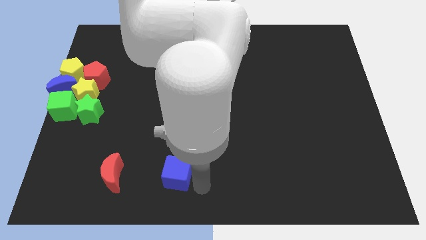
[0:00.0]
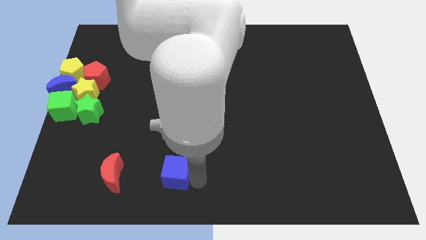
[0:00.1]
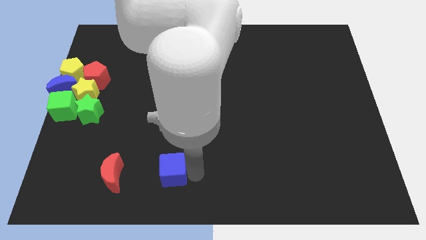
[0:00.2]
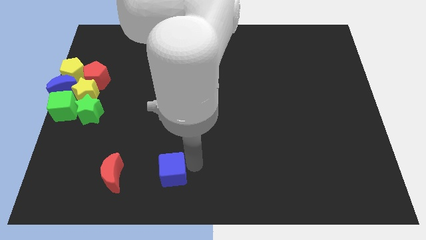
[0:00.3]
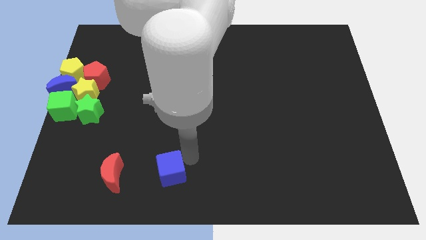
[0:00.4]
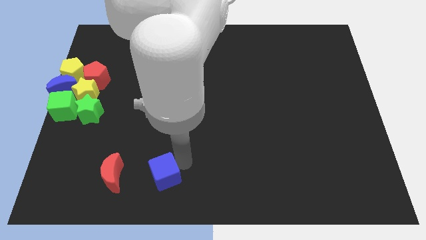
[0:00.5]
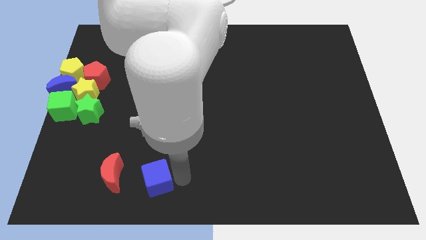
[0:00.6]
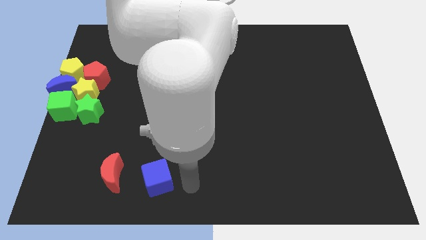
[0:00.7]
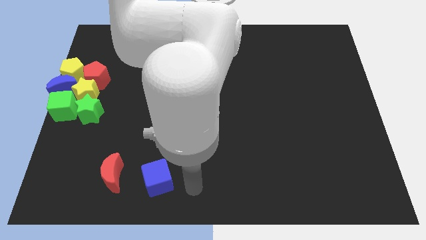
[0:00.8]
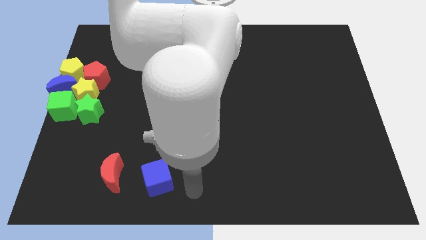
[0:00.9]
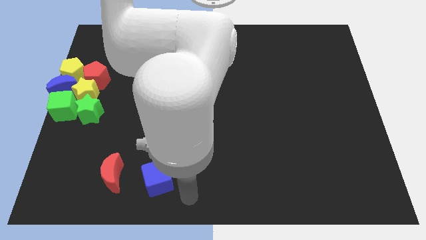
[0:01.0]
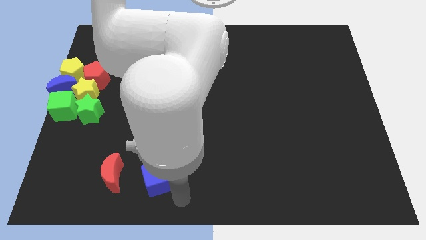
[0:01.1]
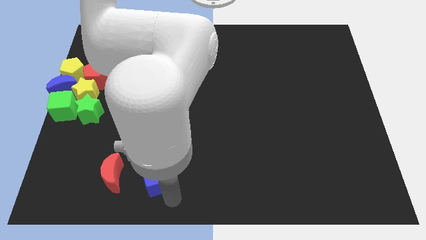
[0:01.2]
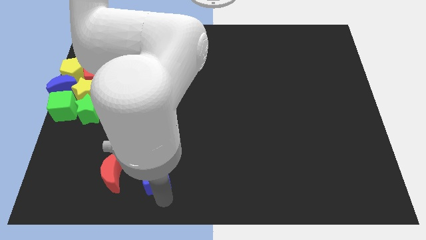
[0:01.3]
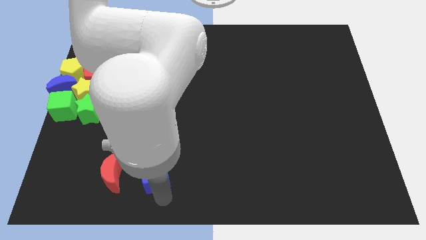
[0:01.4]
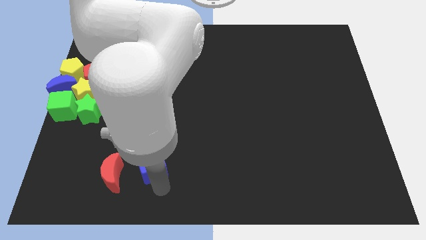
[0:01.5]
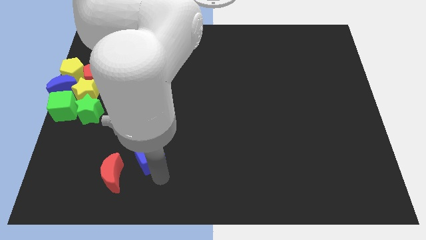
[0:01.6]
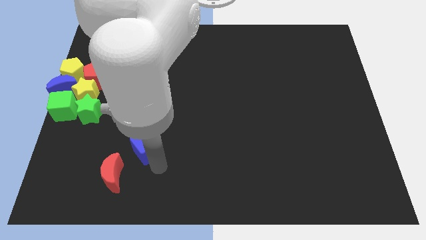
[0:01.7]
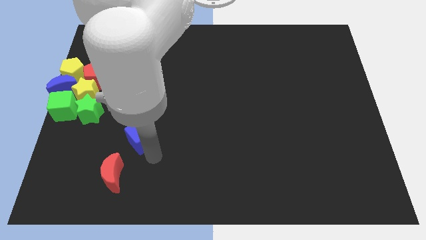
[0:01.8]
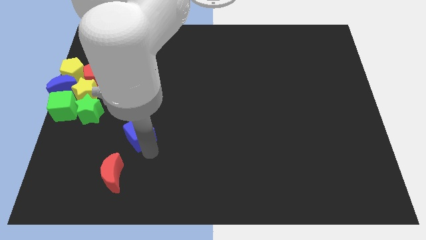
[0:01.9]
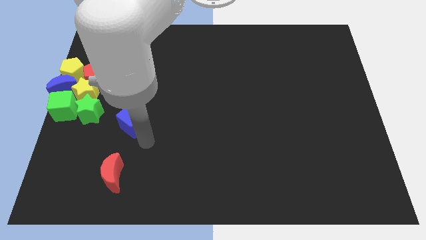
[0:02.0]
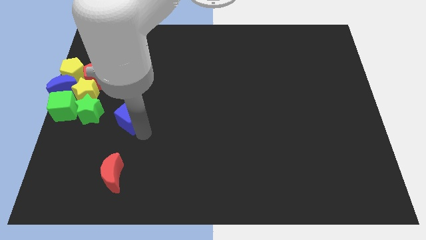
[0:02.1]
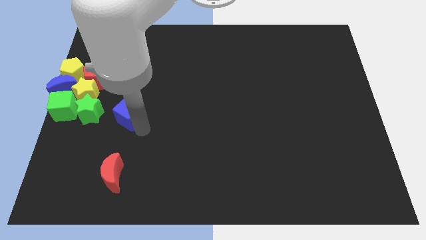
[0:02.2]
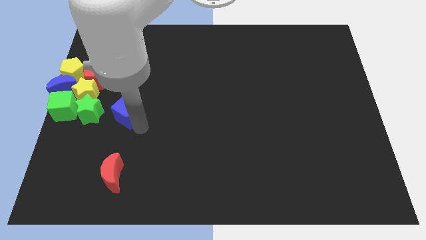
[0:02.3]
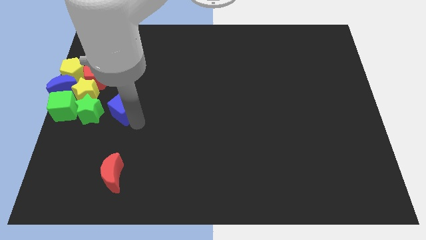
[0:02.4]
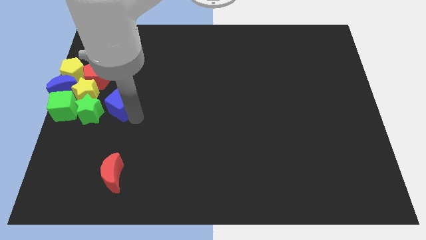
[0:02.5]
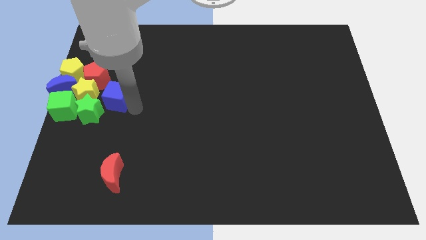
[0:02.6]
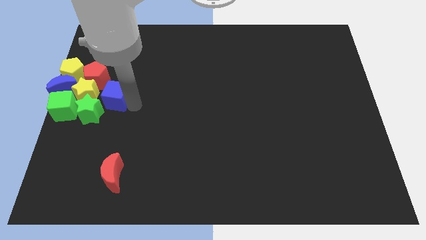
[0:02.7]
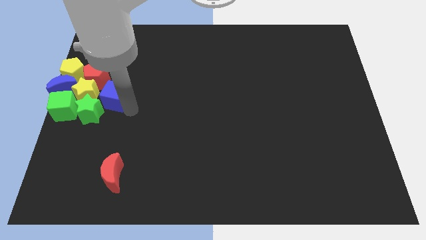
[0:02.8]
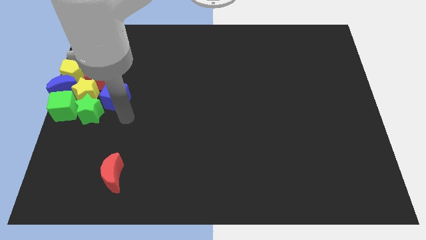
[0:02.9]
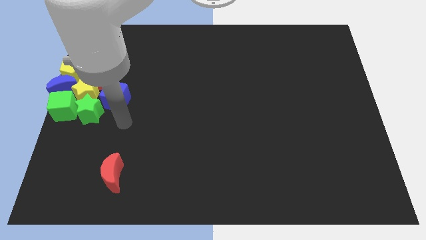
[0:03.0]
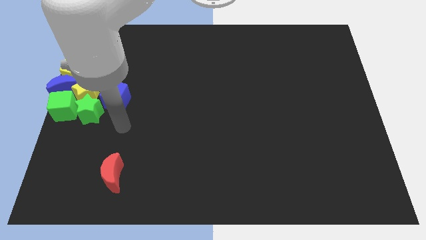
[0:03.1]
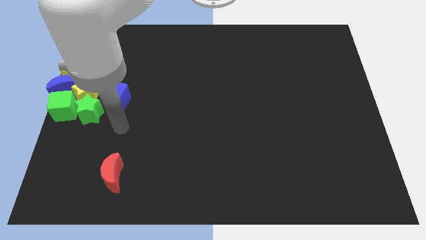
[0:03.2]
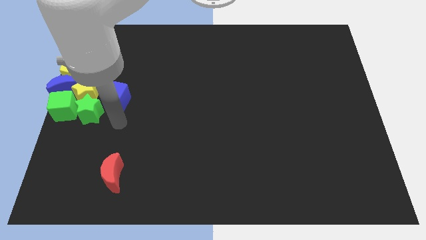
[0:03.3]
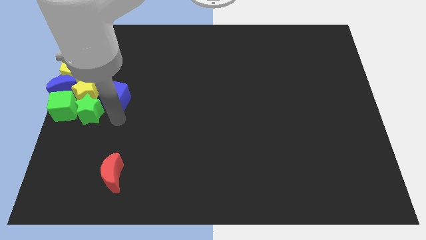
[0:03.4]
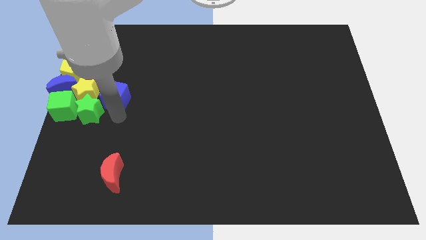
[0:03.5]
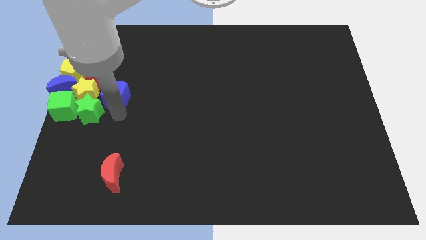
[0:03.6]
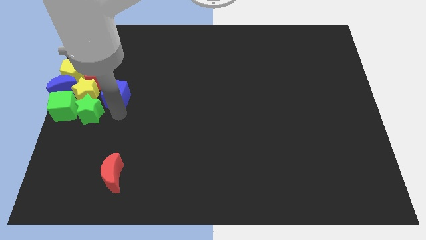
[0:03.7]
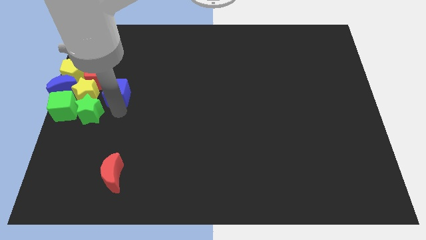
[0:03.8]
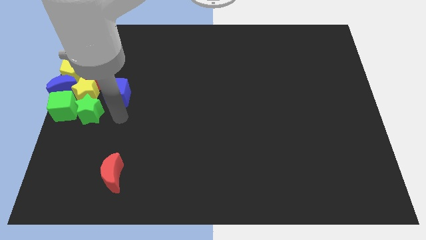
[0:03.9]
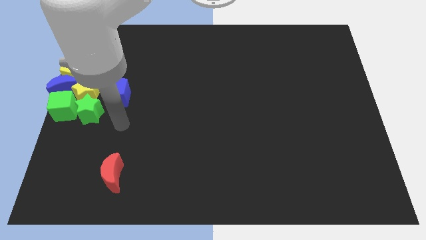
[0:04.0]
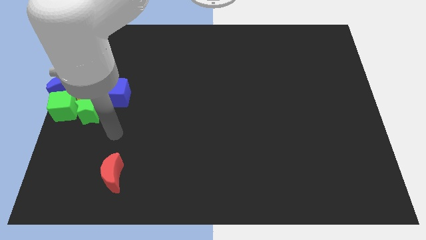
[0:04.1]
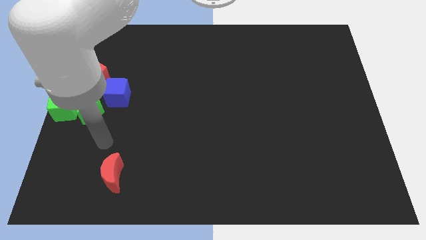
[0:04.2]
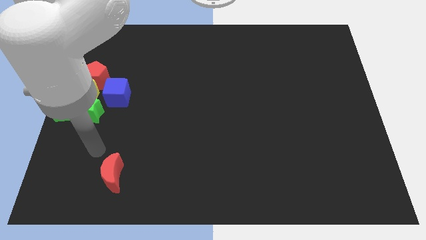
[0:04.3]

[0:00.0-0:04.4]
place the blue cube to the right side of the yellow star

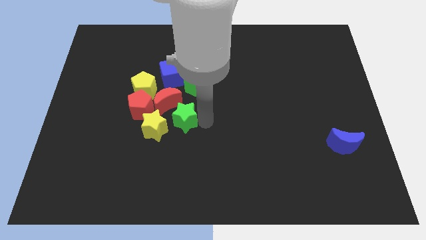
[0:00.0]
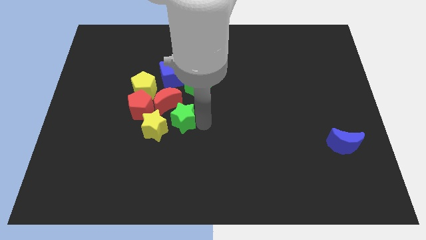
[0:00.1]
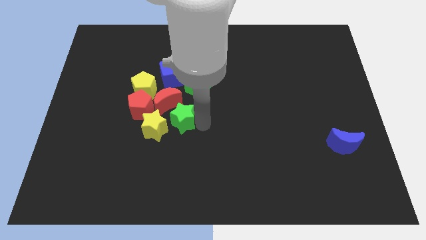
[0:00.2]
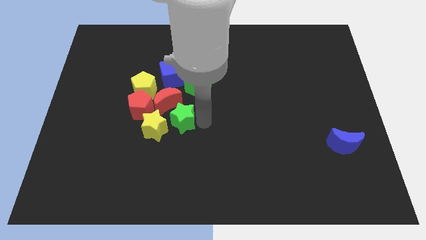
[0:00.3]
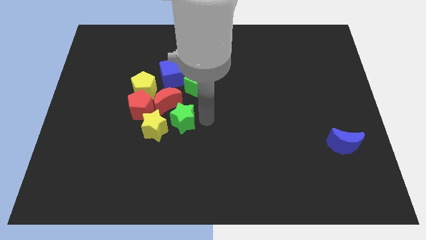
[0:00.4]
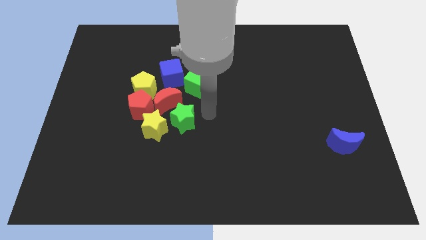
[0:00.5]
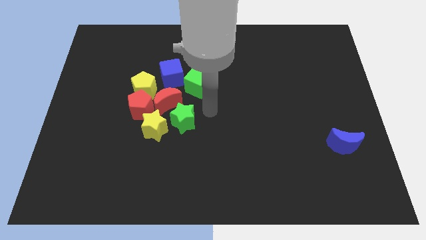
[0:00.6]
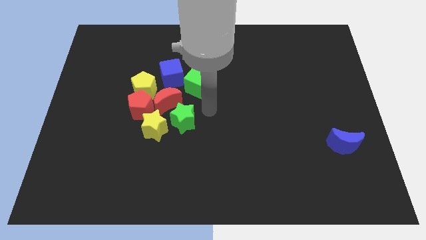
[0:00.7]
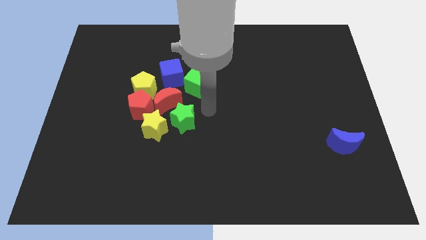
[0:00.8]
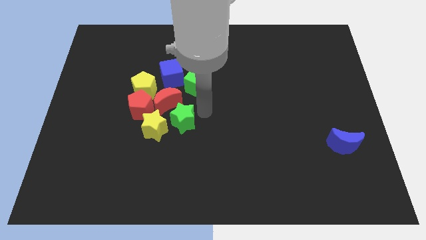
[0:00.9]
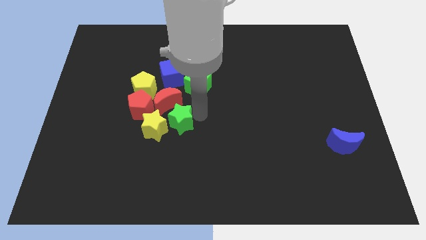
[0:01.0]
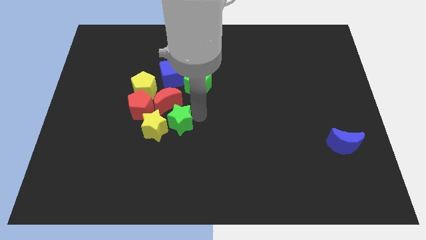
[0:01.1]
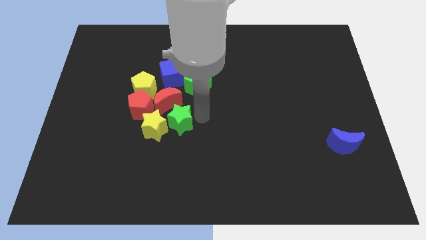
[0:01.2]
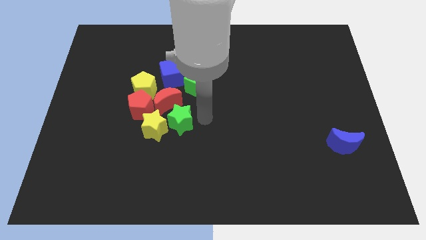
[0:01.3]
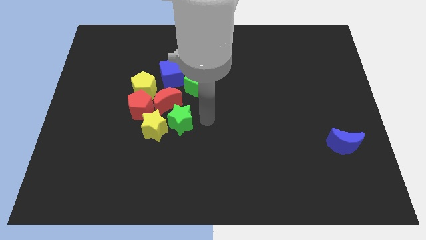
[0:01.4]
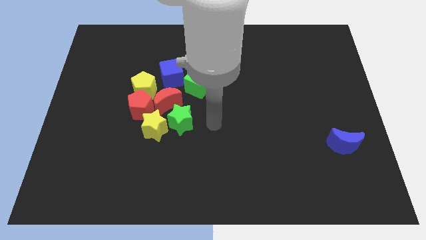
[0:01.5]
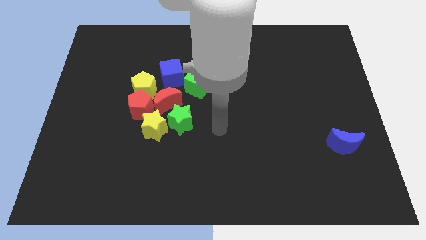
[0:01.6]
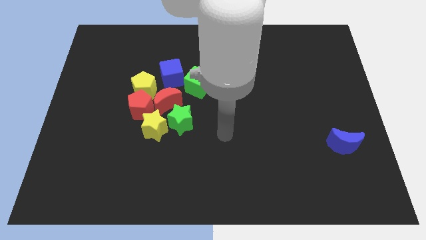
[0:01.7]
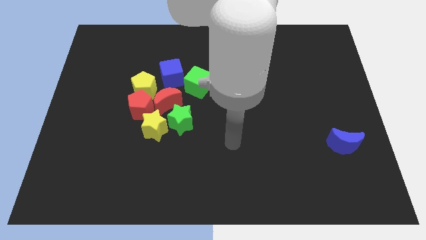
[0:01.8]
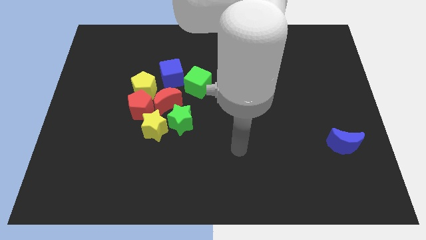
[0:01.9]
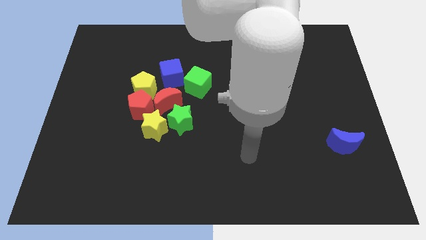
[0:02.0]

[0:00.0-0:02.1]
put the green star right to the yellow star

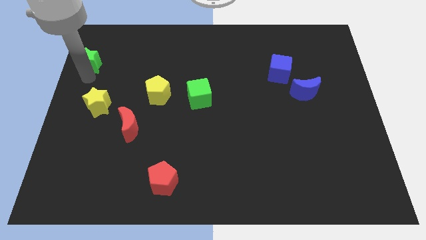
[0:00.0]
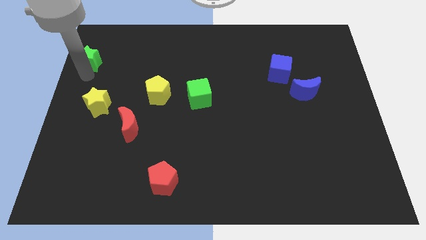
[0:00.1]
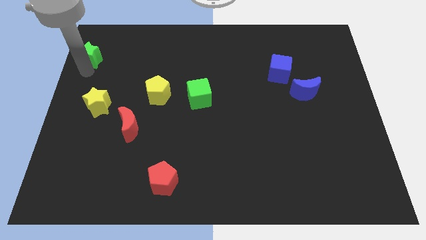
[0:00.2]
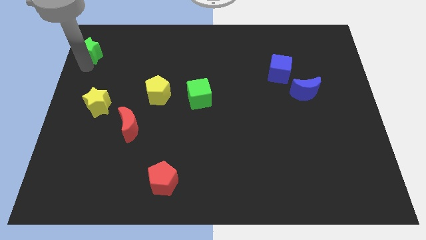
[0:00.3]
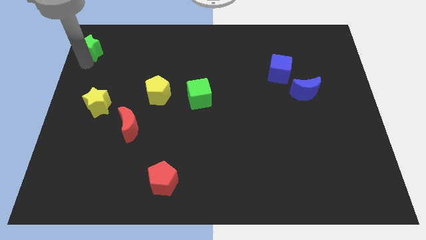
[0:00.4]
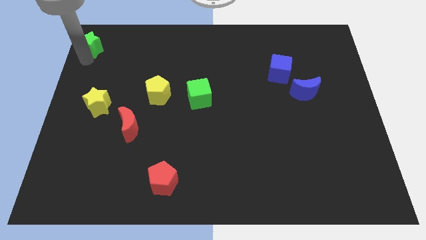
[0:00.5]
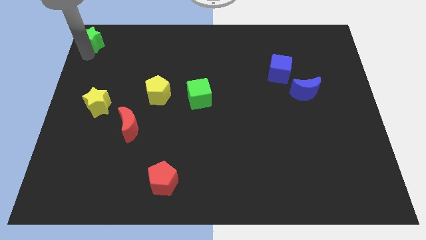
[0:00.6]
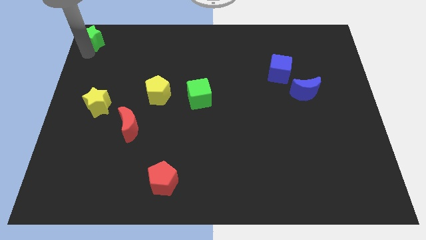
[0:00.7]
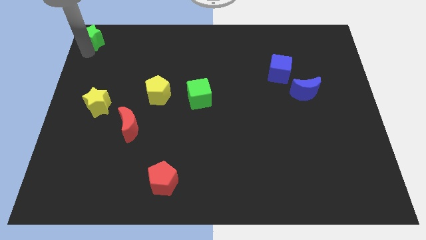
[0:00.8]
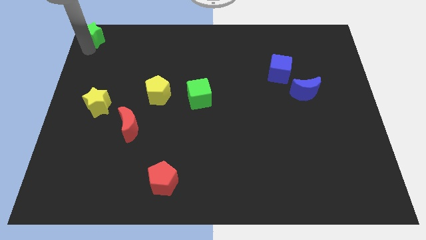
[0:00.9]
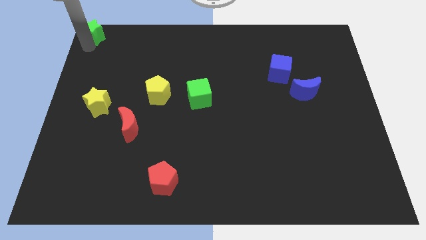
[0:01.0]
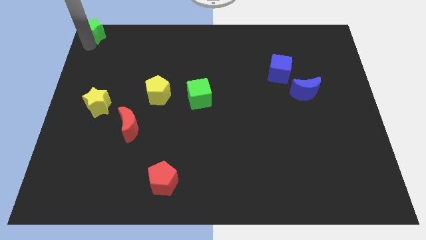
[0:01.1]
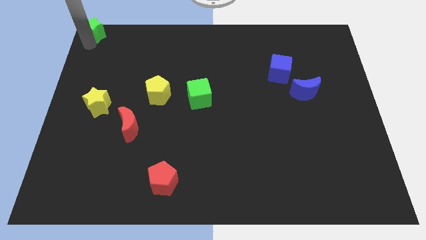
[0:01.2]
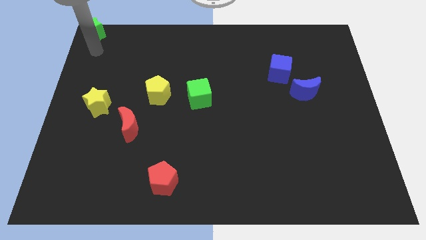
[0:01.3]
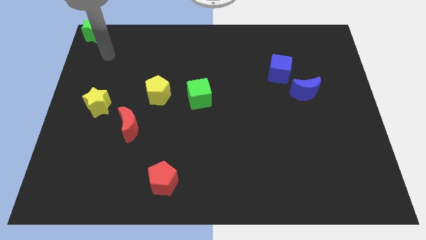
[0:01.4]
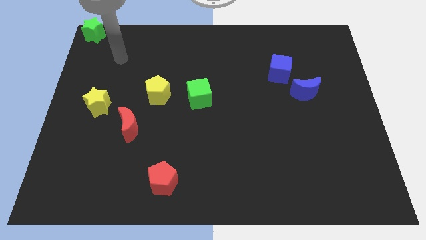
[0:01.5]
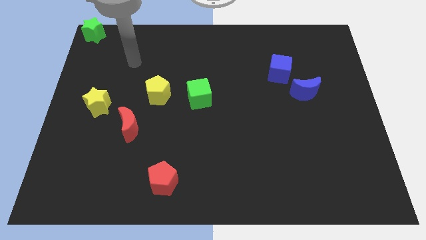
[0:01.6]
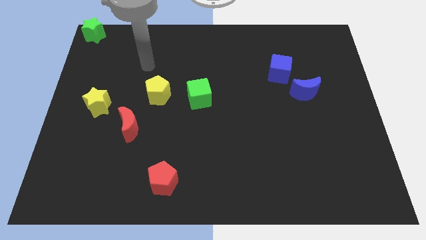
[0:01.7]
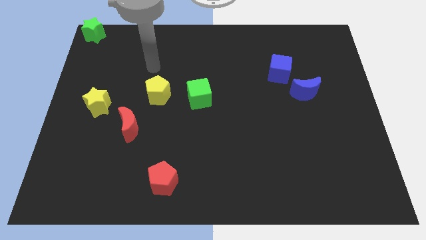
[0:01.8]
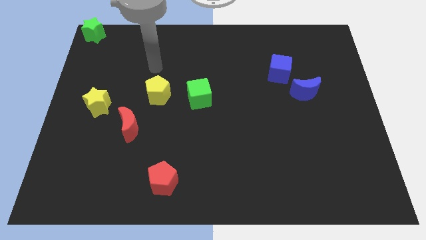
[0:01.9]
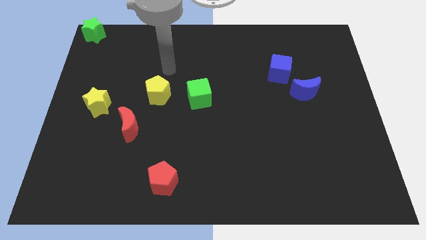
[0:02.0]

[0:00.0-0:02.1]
move the green star to the top left of the board

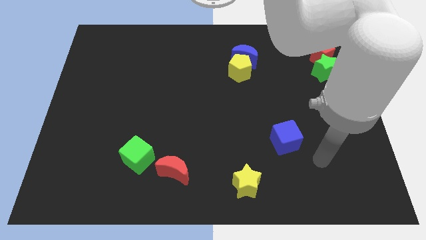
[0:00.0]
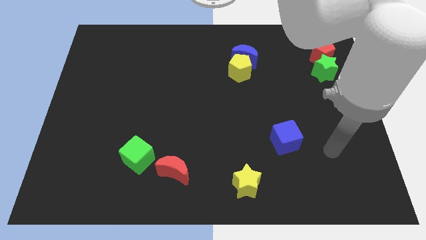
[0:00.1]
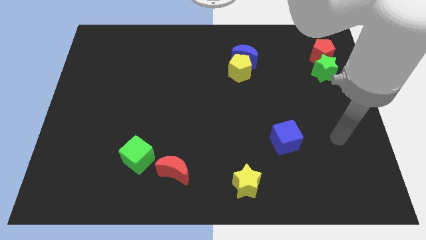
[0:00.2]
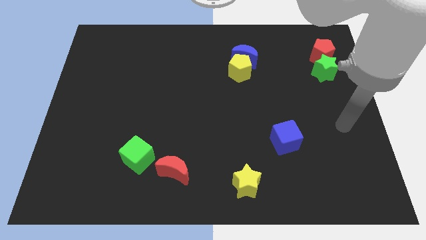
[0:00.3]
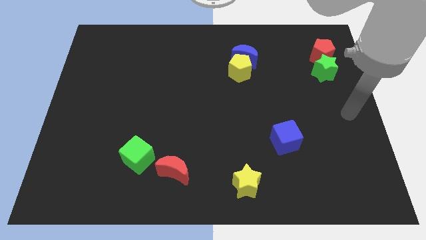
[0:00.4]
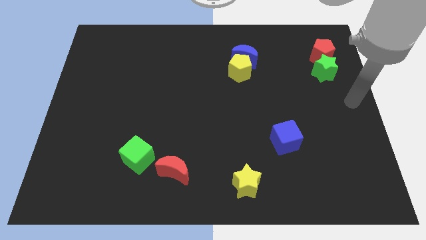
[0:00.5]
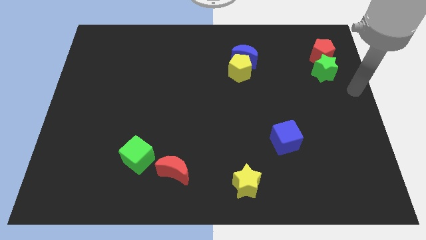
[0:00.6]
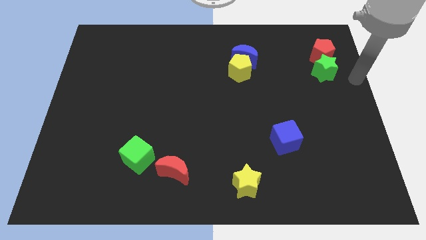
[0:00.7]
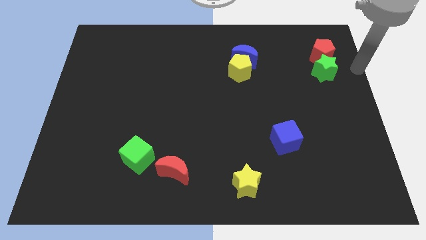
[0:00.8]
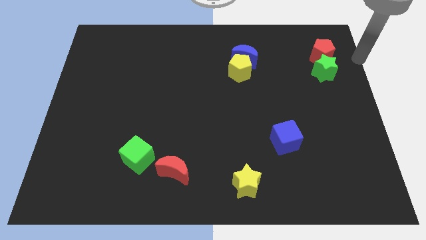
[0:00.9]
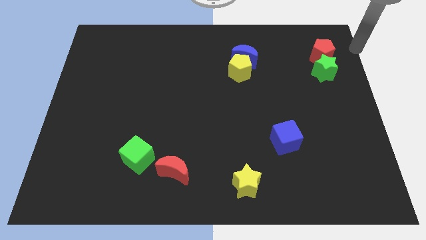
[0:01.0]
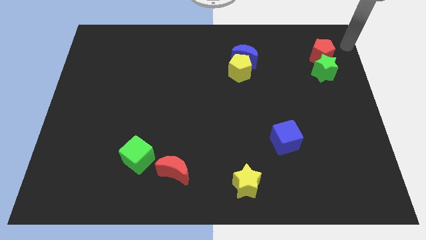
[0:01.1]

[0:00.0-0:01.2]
place your arm at the right side of red pentagon
